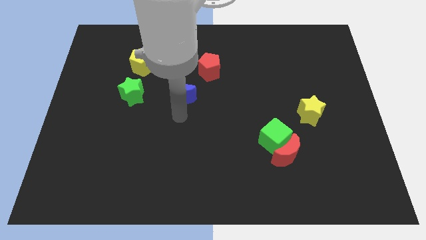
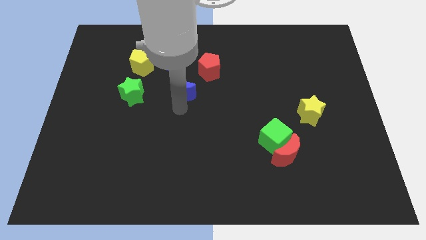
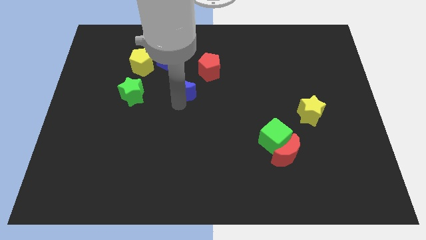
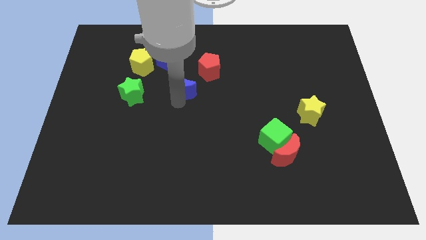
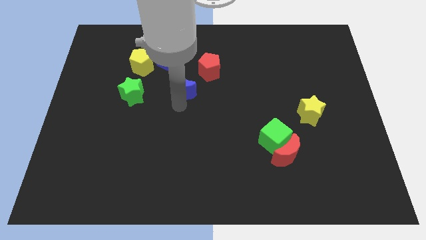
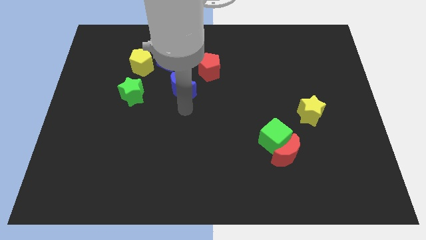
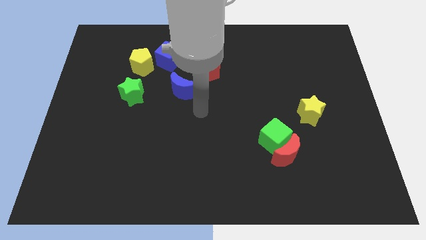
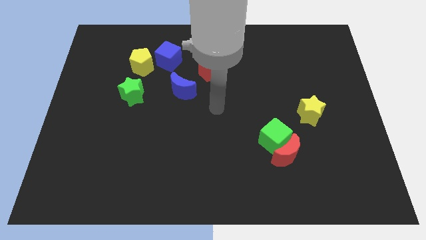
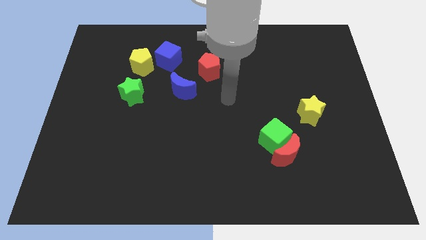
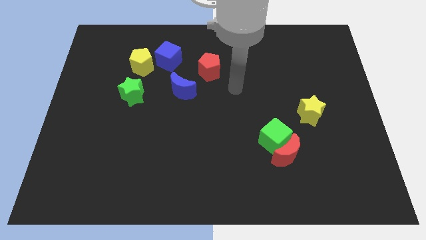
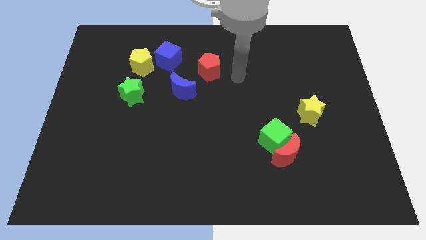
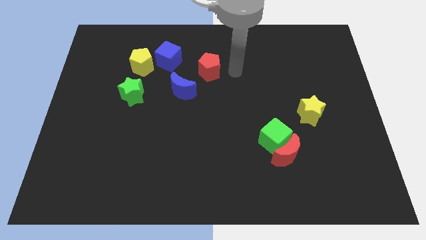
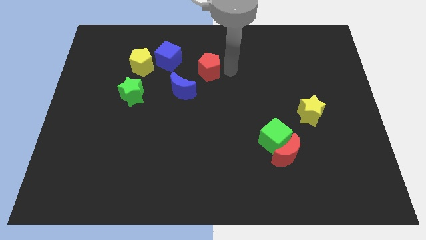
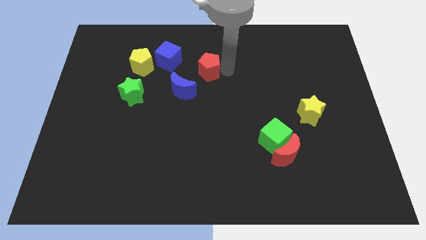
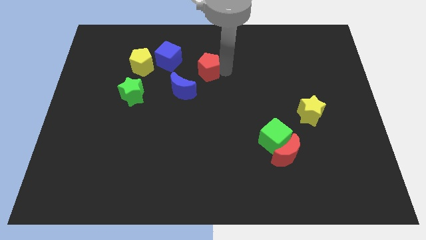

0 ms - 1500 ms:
move blue crescent towards the blue cube

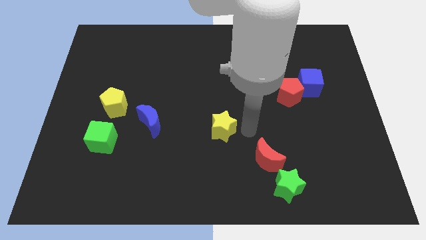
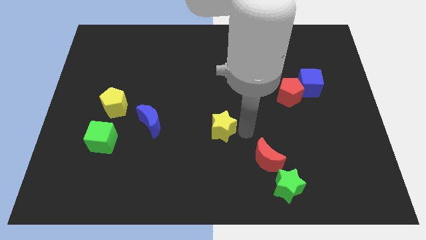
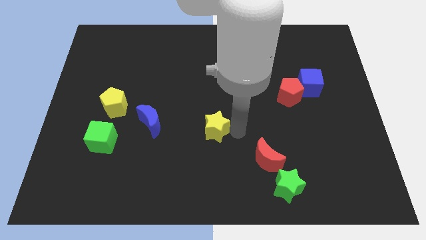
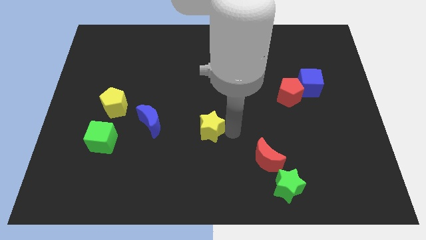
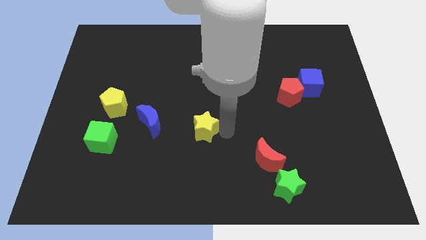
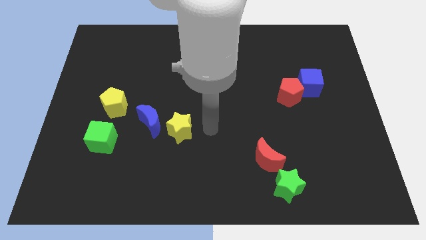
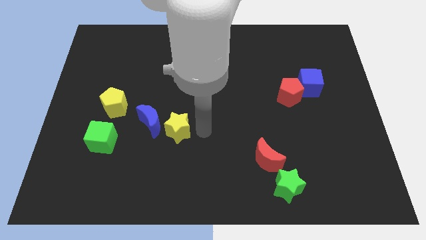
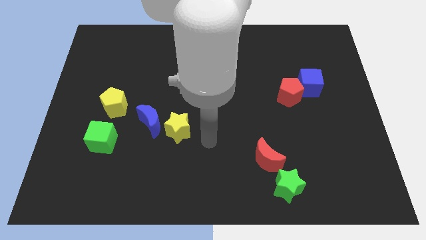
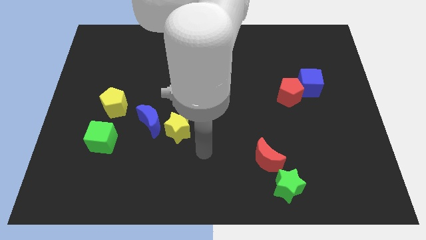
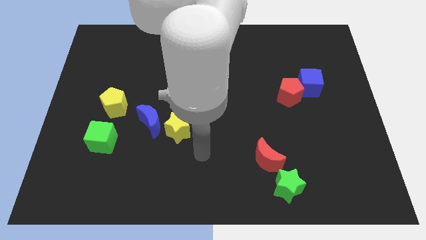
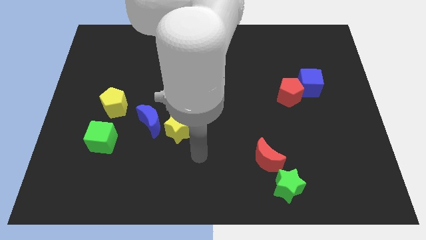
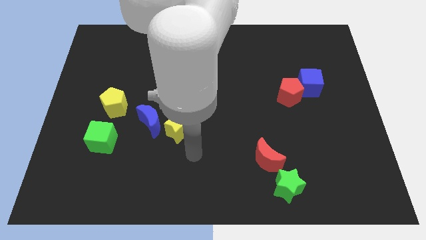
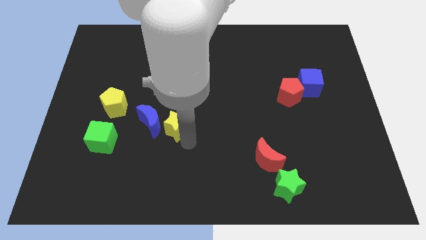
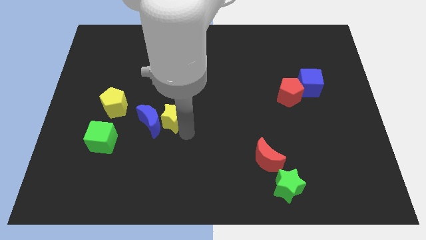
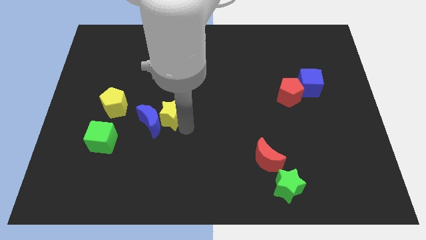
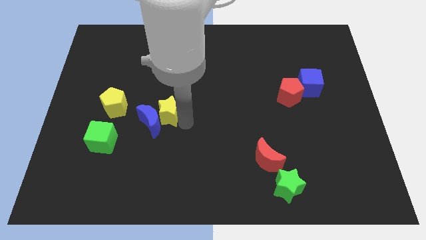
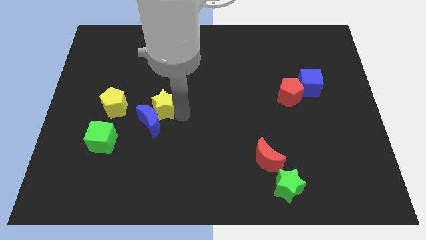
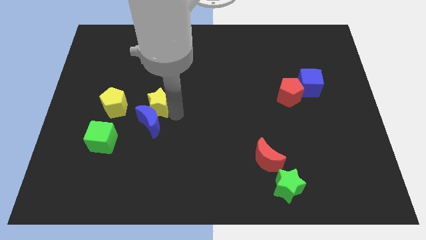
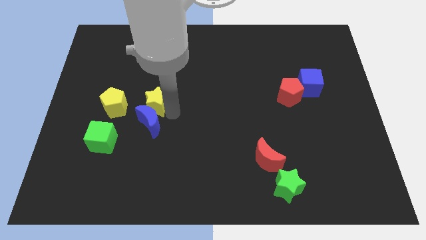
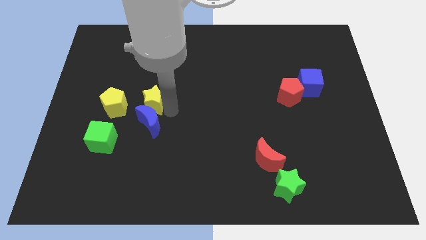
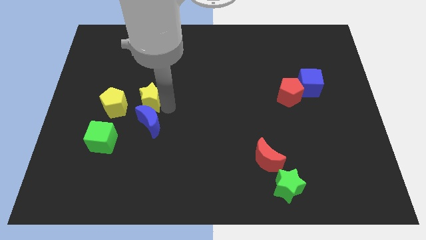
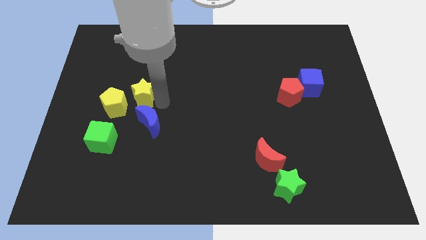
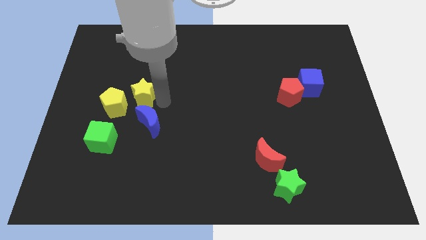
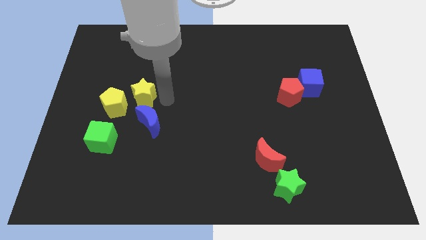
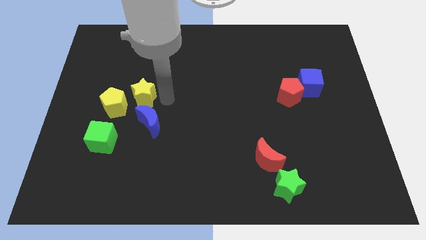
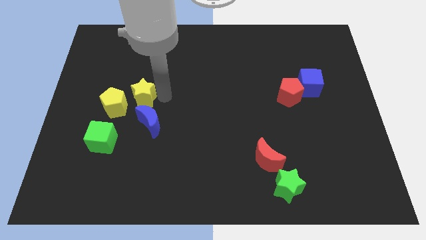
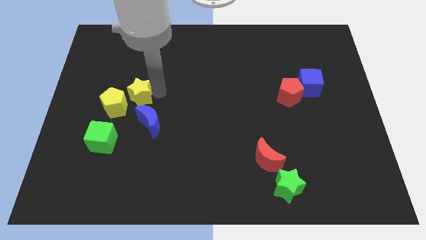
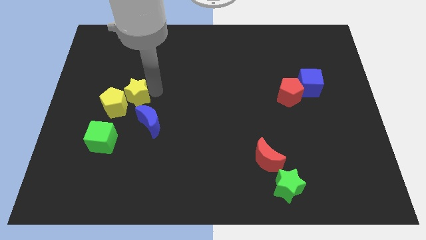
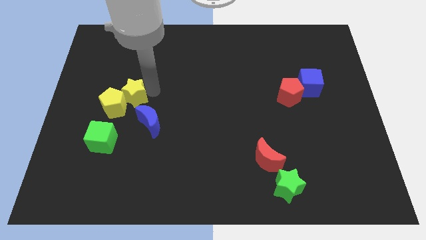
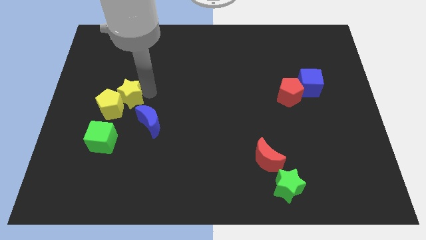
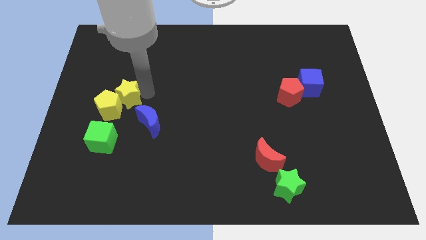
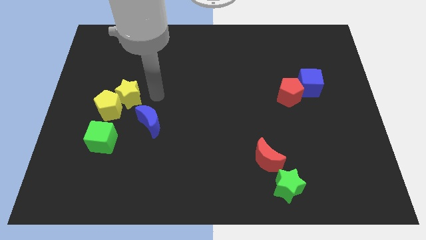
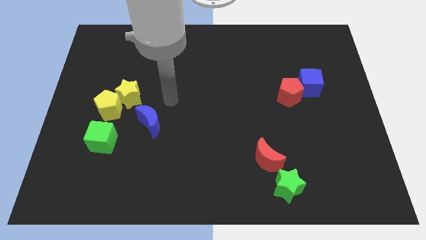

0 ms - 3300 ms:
place the yellow star into the yellow pentagon

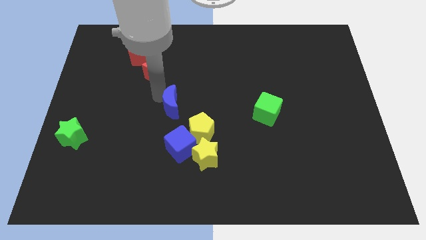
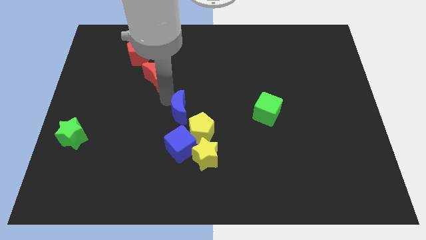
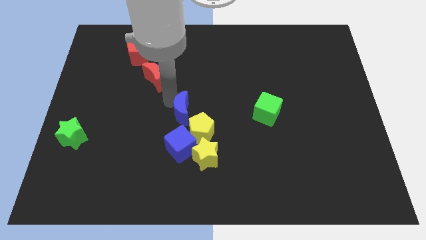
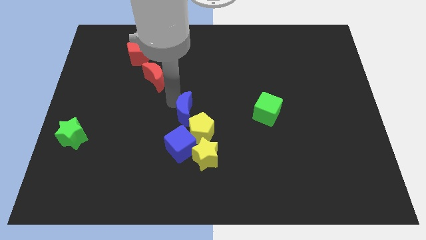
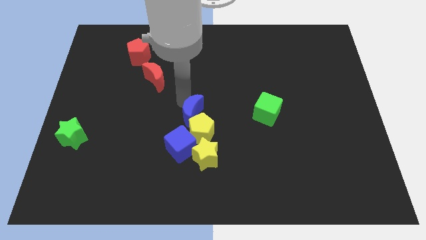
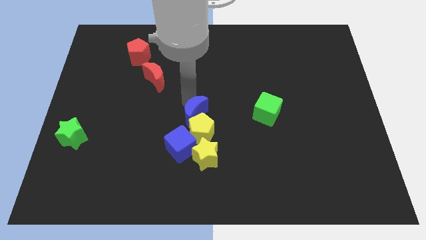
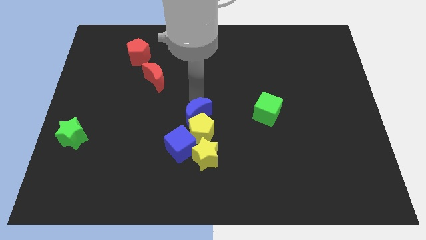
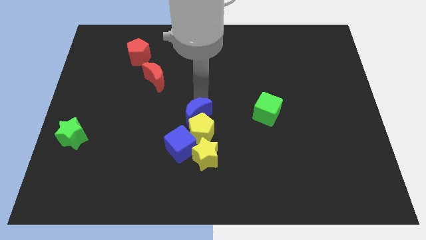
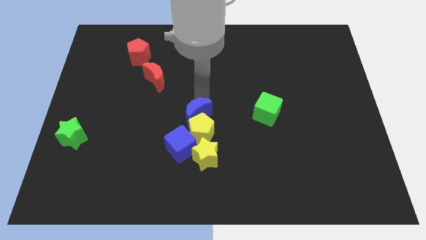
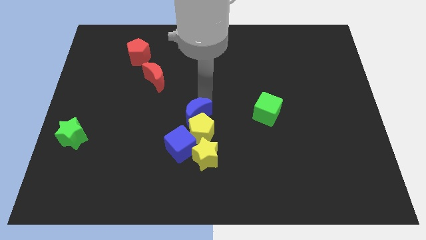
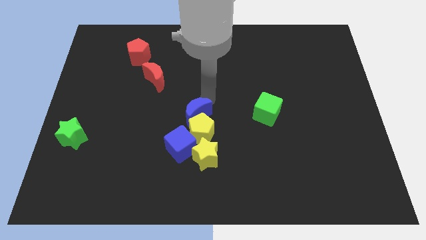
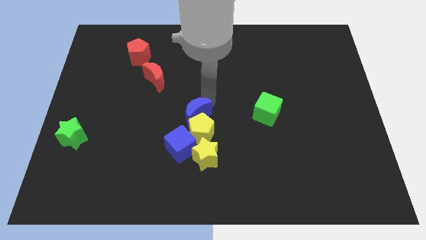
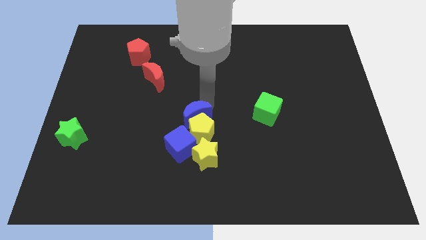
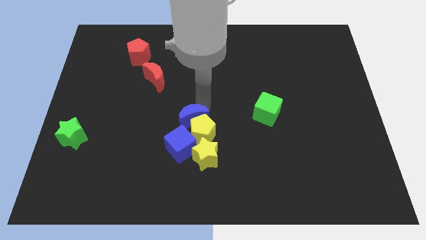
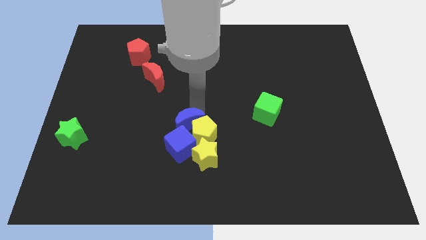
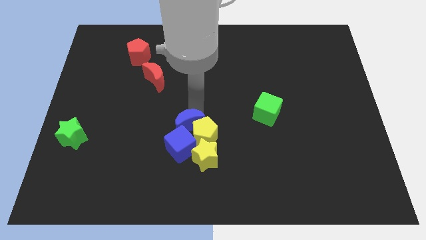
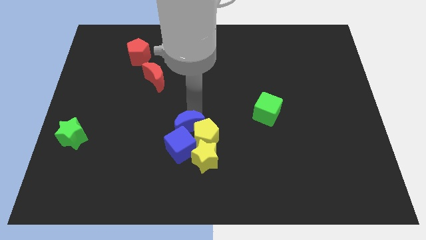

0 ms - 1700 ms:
place blue crescent above yellow pentagon

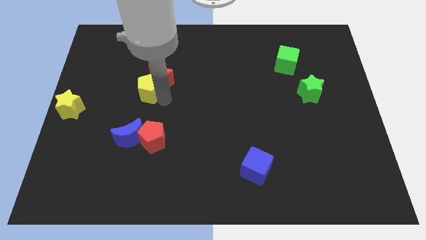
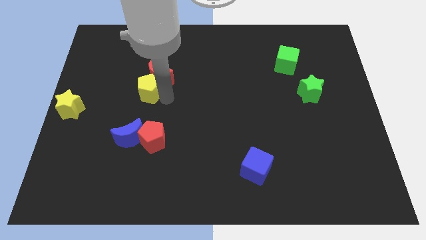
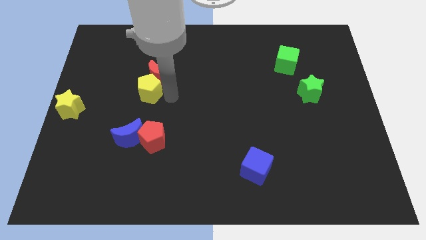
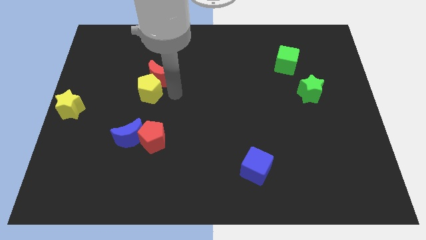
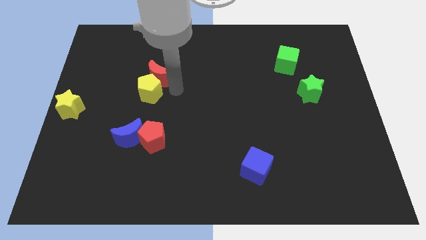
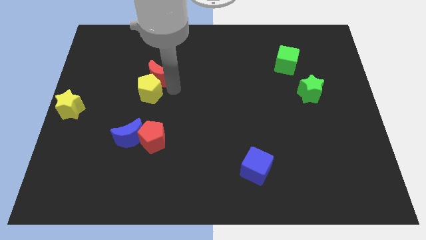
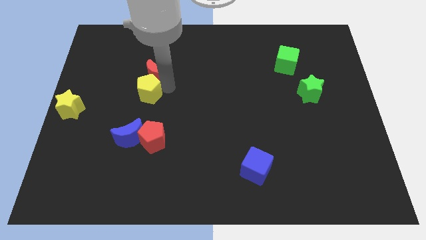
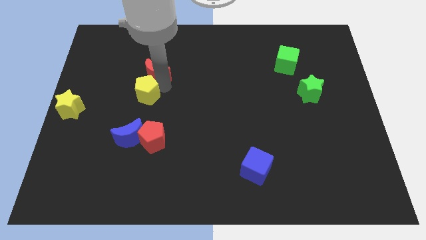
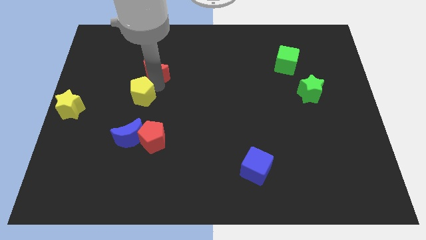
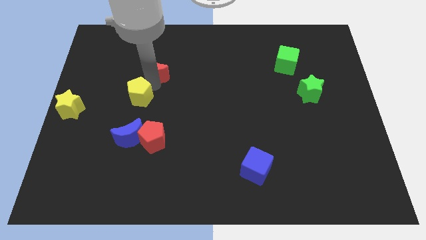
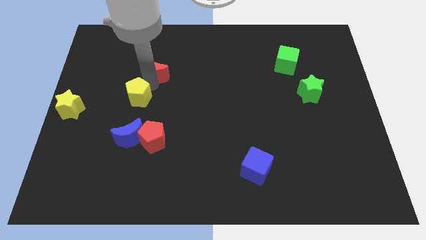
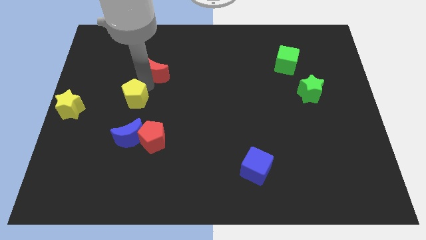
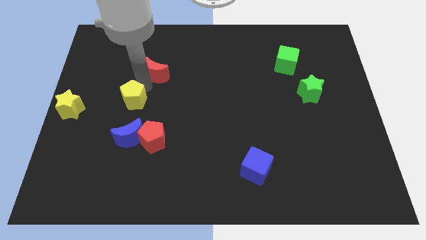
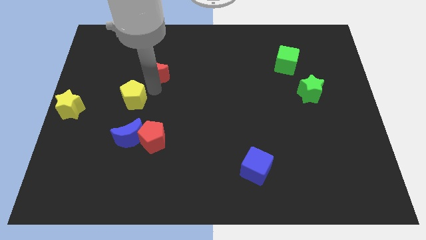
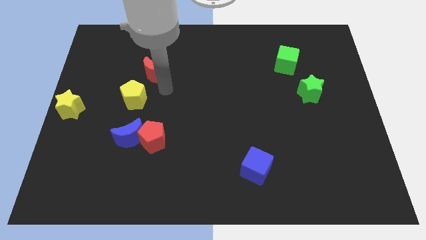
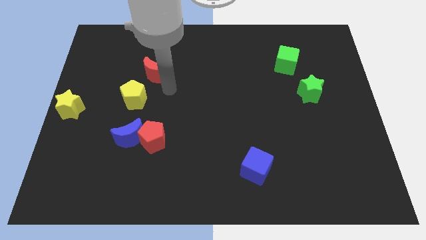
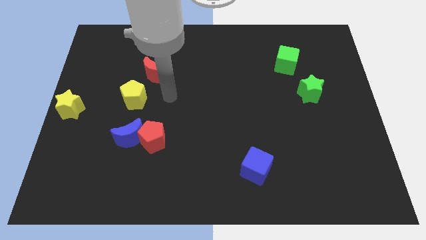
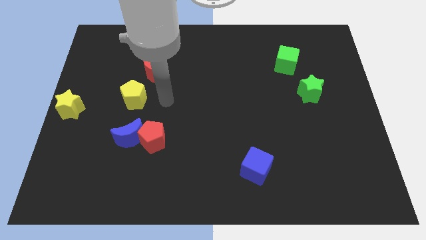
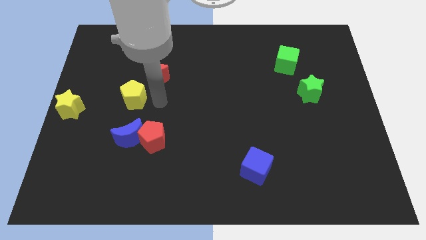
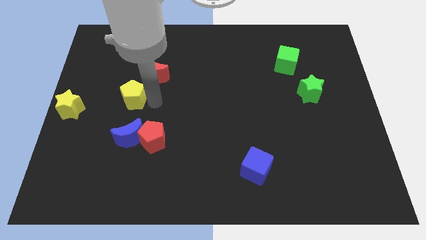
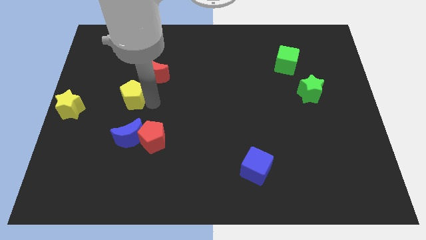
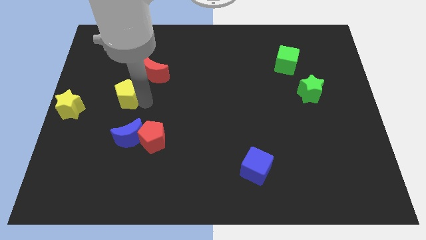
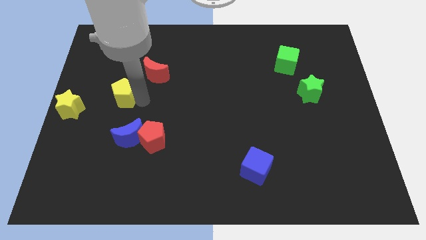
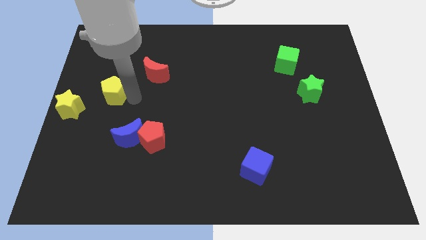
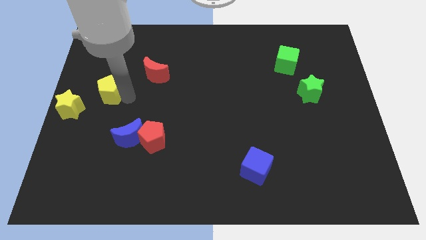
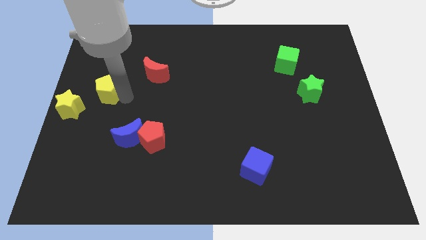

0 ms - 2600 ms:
move the yellow pentagon to the top left of the blue crescent
